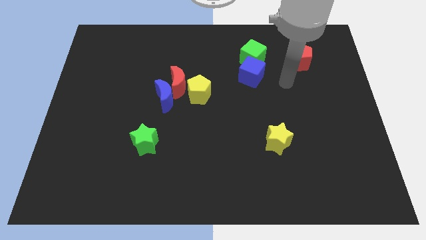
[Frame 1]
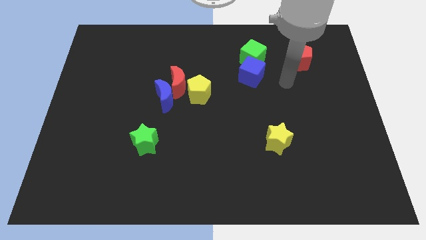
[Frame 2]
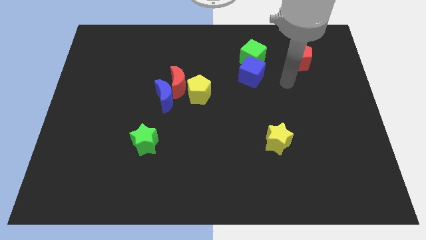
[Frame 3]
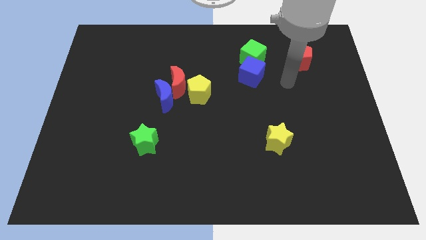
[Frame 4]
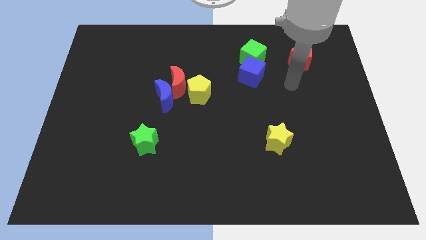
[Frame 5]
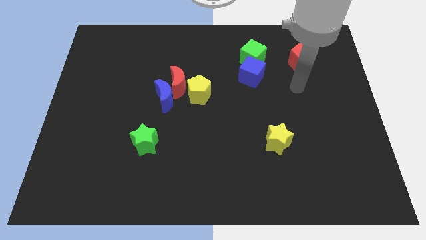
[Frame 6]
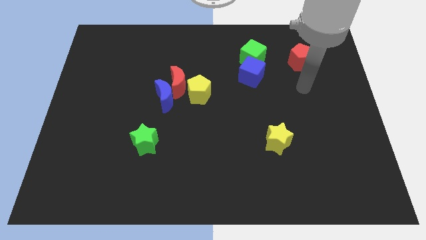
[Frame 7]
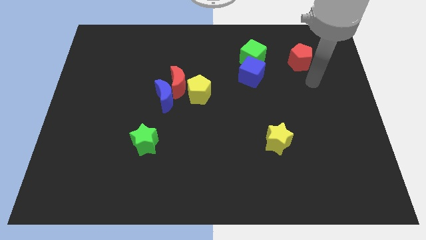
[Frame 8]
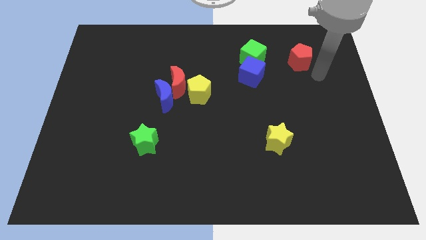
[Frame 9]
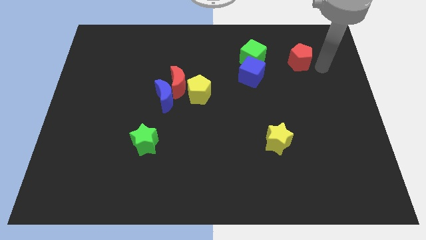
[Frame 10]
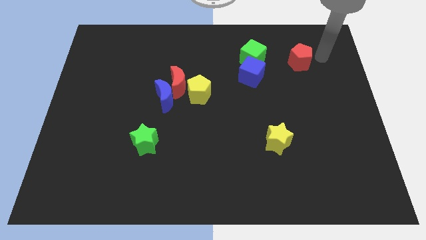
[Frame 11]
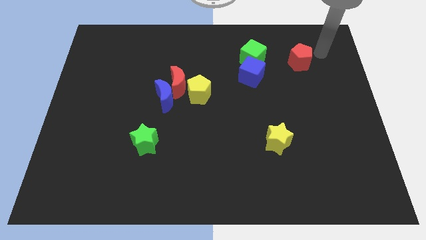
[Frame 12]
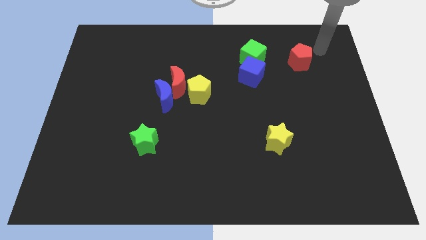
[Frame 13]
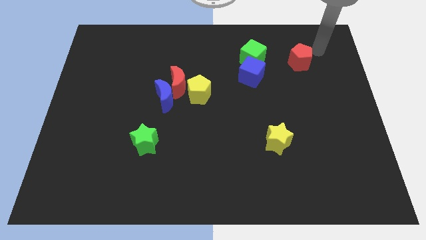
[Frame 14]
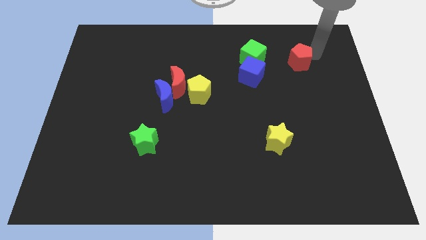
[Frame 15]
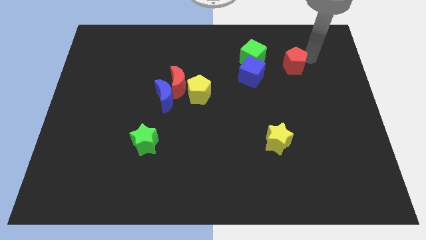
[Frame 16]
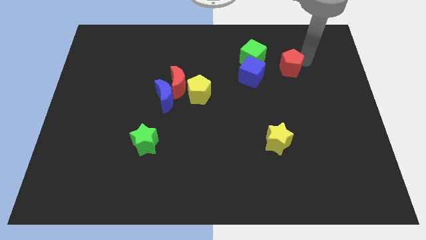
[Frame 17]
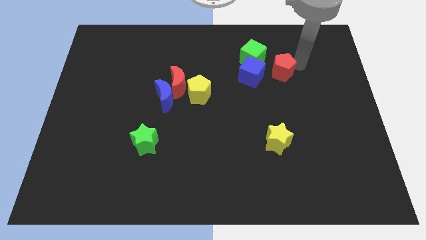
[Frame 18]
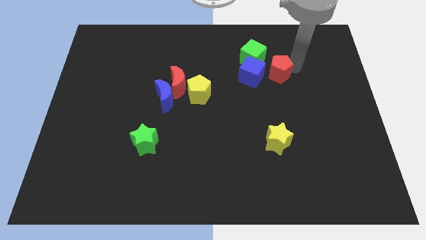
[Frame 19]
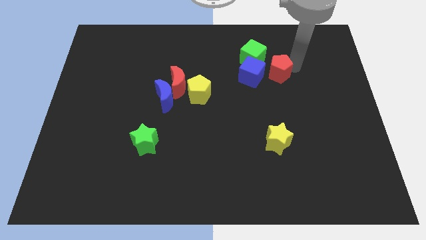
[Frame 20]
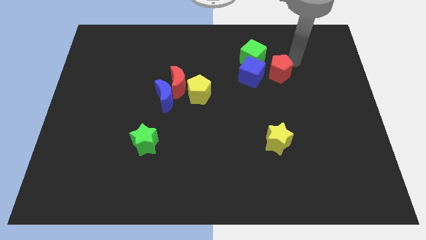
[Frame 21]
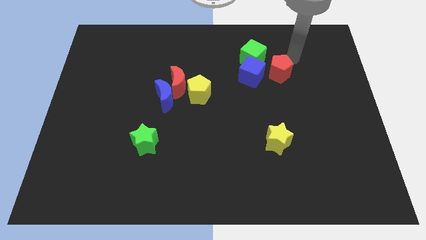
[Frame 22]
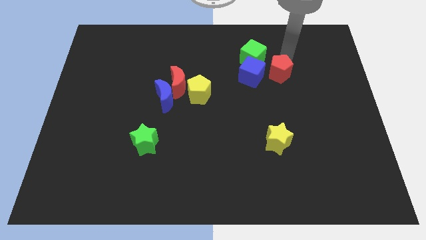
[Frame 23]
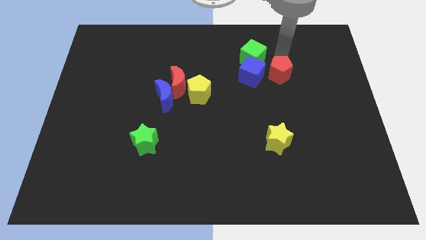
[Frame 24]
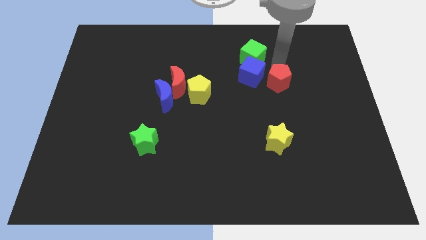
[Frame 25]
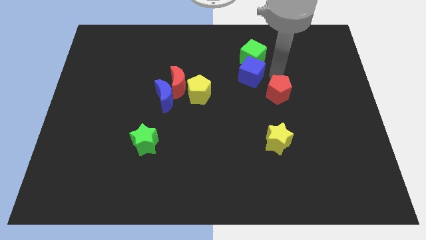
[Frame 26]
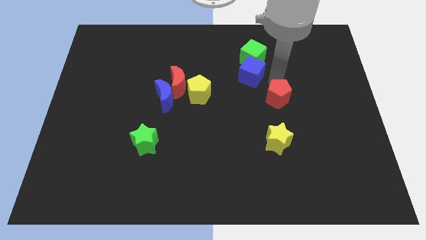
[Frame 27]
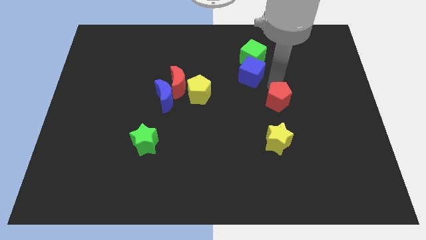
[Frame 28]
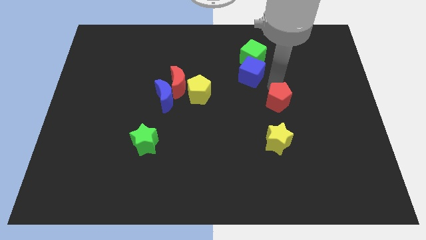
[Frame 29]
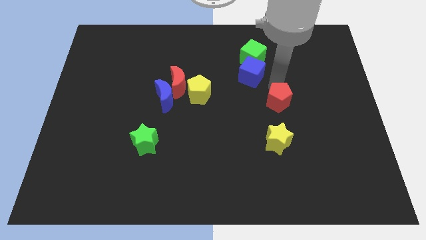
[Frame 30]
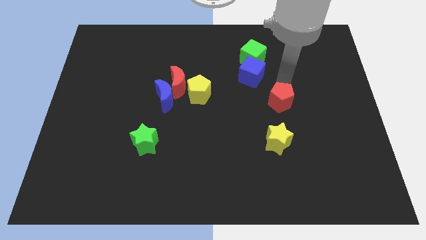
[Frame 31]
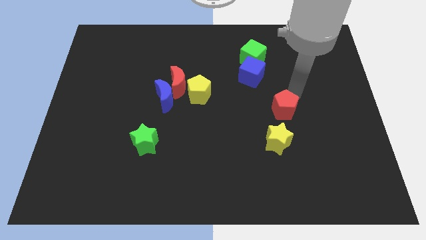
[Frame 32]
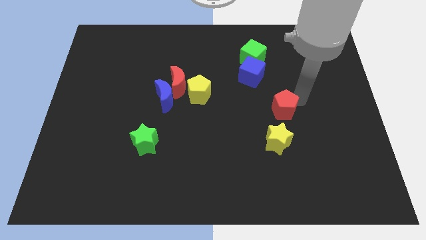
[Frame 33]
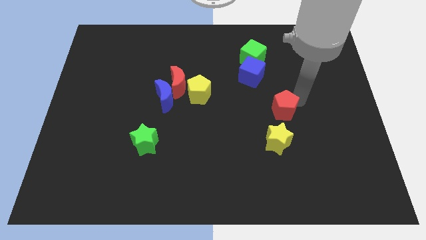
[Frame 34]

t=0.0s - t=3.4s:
slide the red pentagon towards the top side of the yellow star

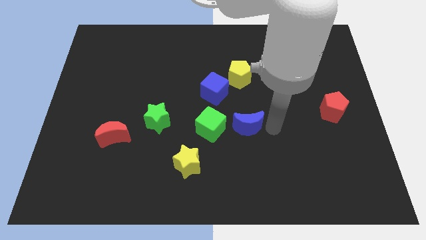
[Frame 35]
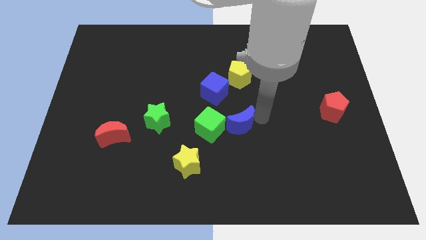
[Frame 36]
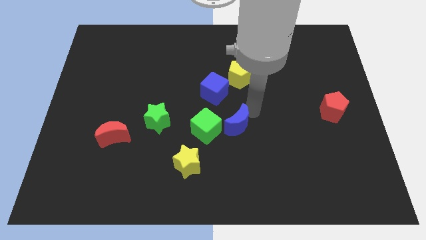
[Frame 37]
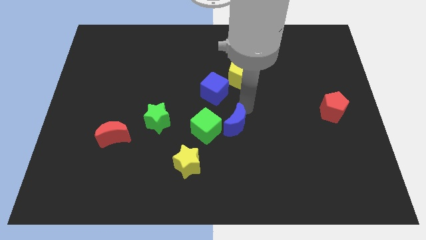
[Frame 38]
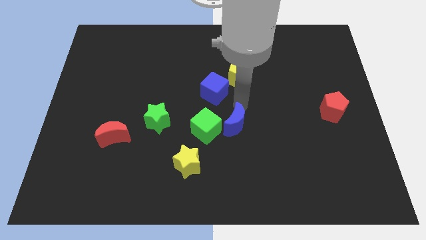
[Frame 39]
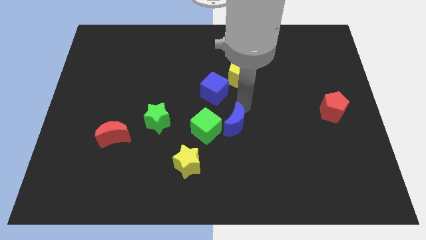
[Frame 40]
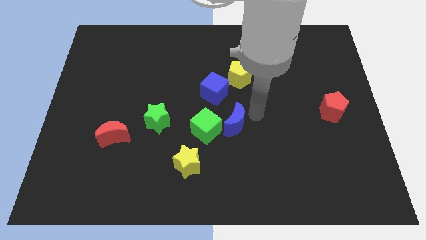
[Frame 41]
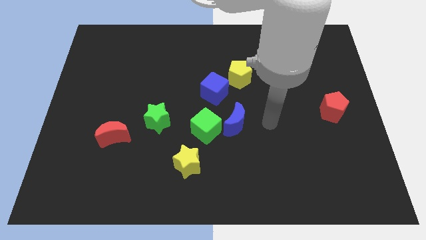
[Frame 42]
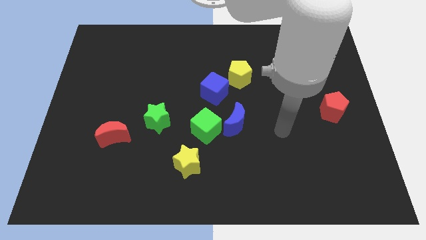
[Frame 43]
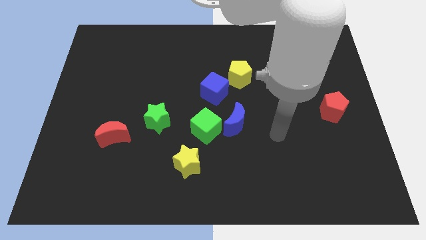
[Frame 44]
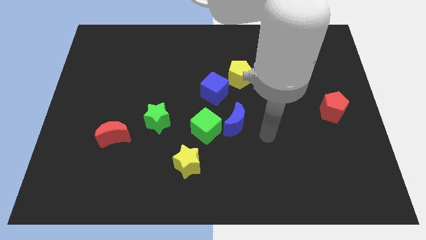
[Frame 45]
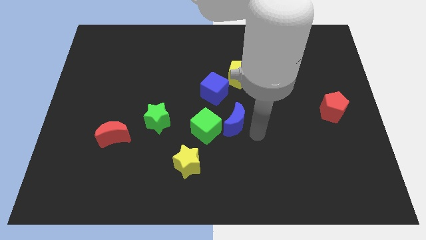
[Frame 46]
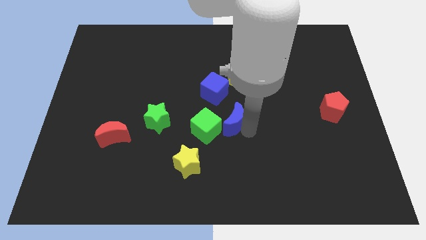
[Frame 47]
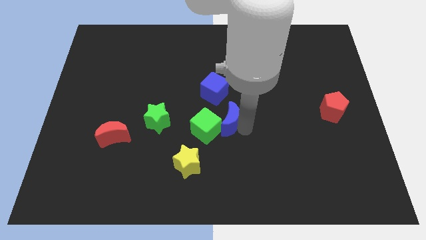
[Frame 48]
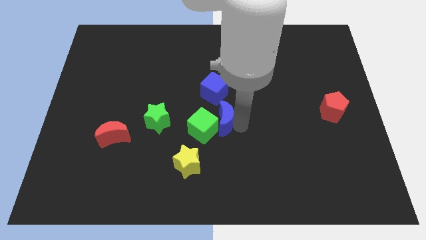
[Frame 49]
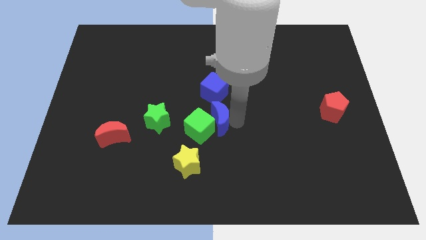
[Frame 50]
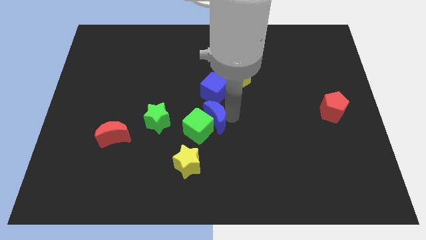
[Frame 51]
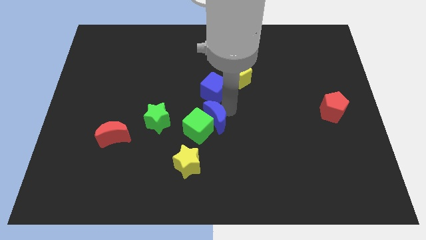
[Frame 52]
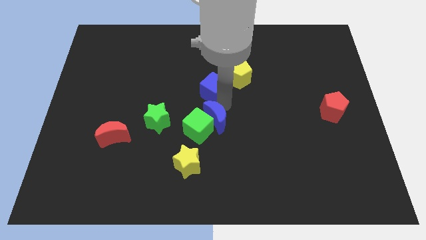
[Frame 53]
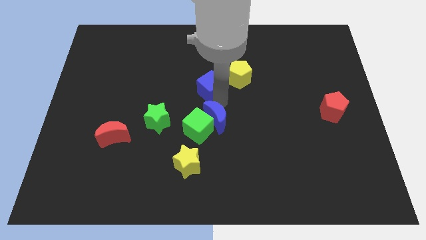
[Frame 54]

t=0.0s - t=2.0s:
slide the blue crescent into the green cube

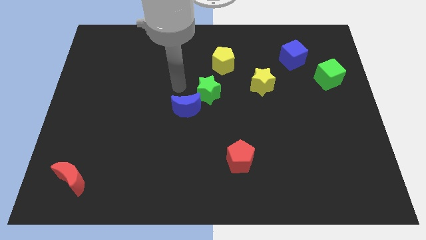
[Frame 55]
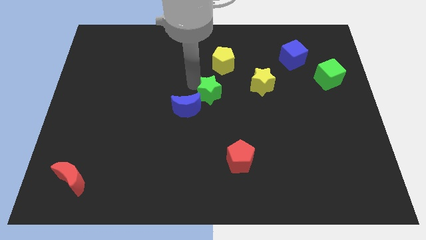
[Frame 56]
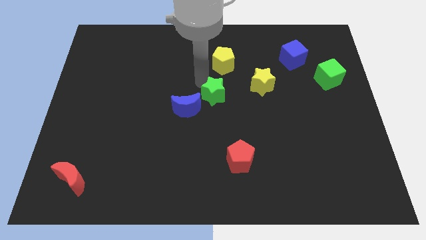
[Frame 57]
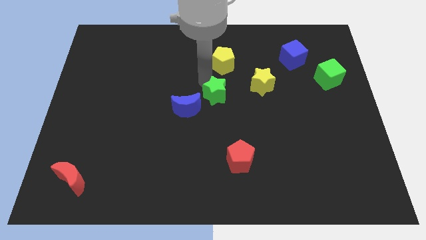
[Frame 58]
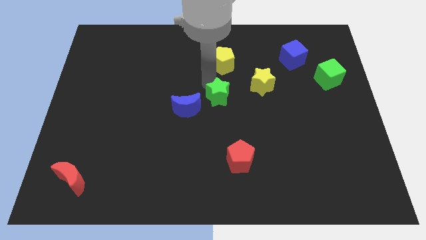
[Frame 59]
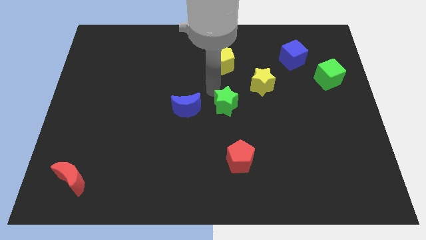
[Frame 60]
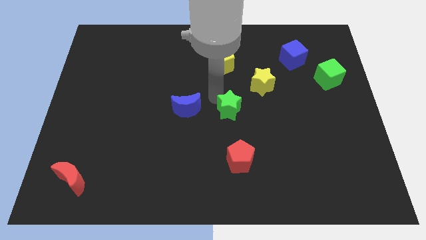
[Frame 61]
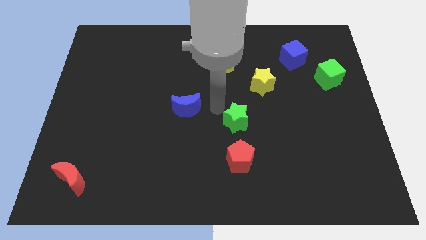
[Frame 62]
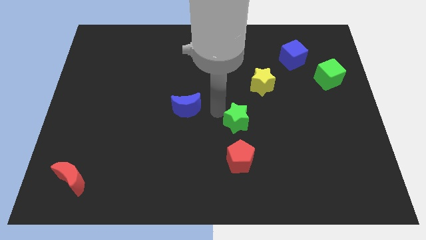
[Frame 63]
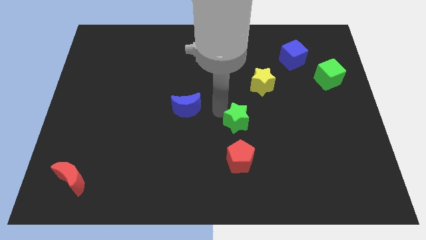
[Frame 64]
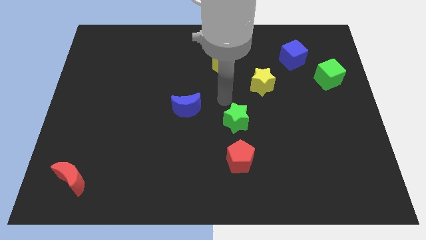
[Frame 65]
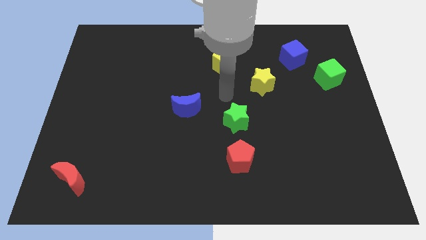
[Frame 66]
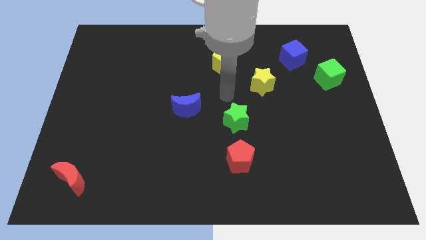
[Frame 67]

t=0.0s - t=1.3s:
put the green star at the bottom left side of the yellow star

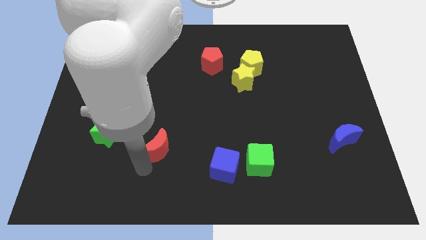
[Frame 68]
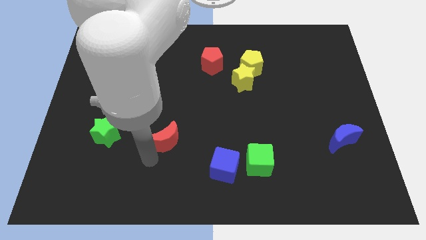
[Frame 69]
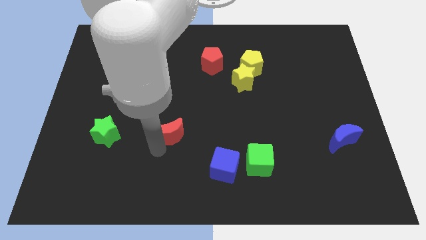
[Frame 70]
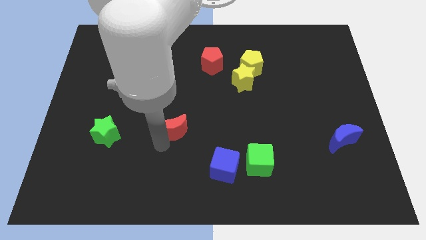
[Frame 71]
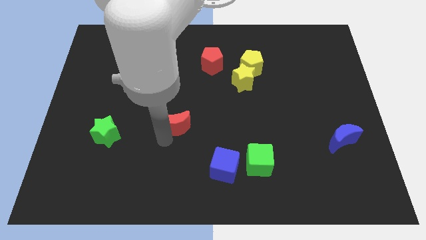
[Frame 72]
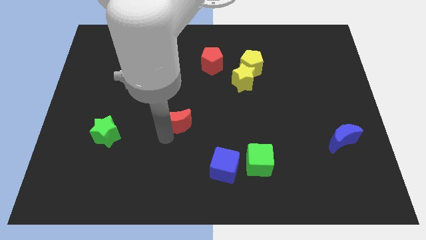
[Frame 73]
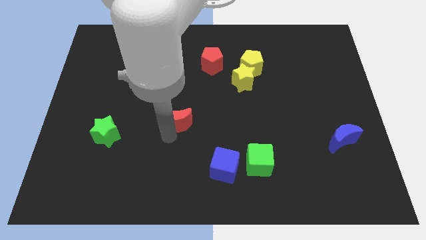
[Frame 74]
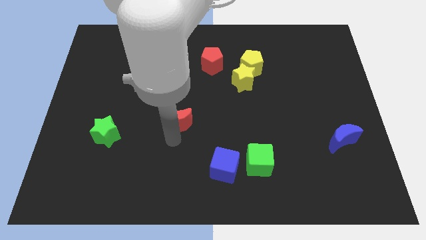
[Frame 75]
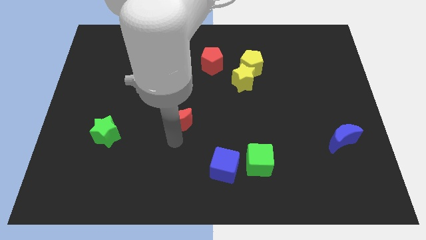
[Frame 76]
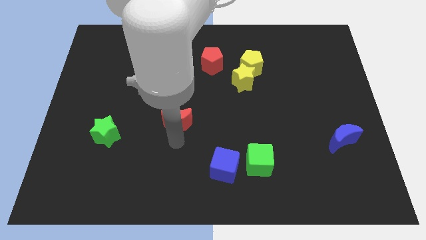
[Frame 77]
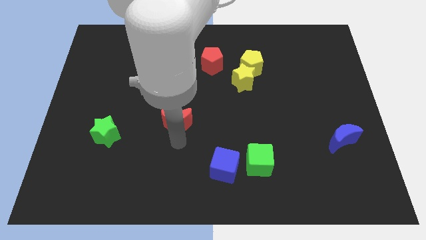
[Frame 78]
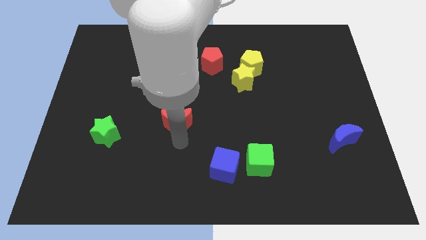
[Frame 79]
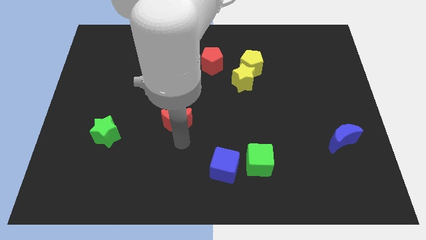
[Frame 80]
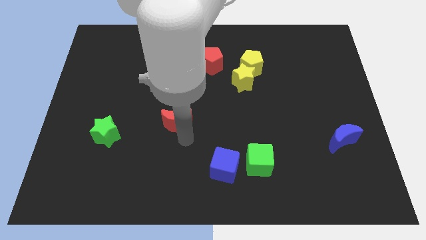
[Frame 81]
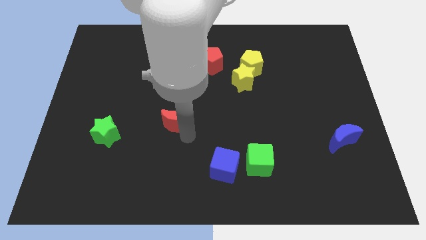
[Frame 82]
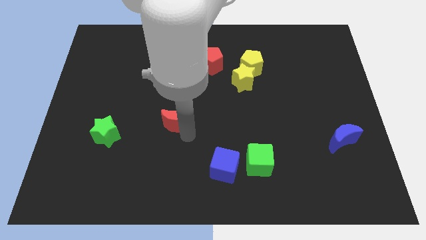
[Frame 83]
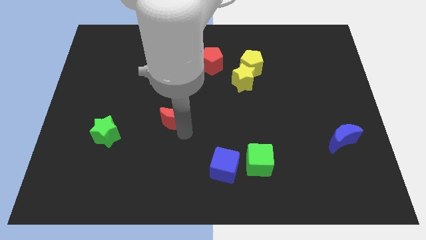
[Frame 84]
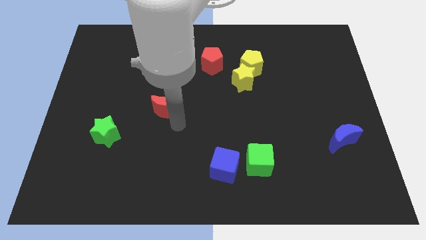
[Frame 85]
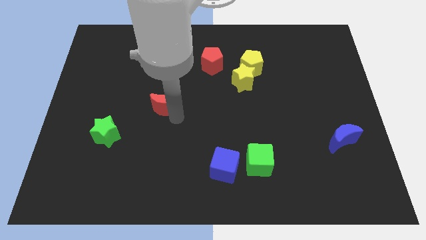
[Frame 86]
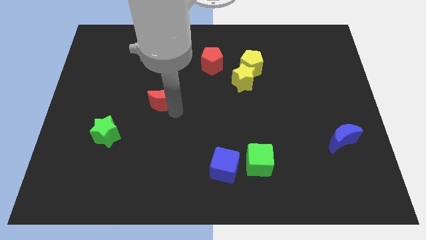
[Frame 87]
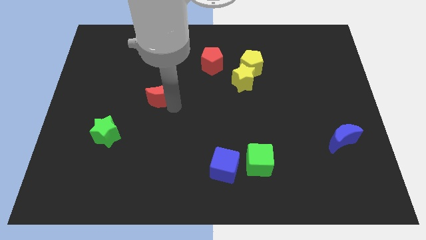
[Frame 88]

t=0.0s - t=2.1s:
slide the red moon diagonally in between the red pentagon and green star
